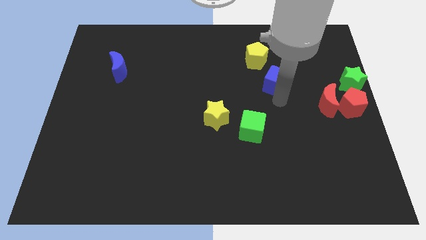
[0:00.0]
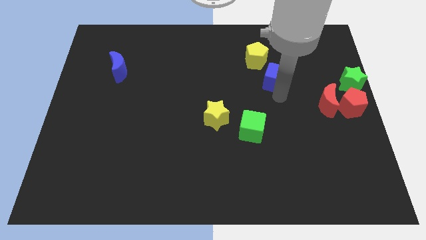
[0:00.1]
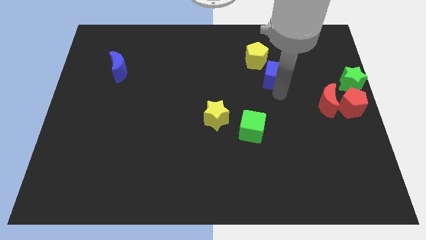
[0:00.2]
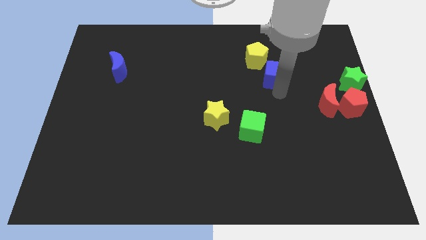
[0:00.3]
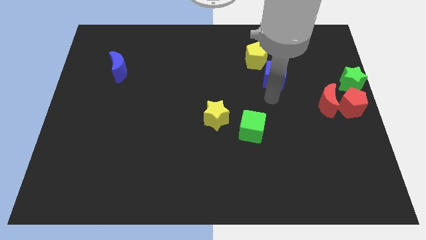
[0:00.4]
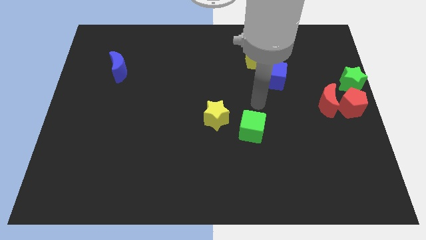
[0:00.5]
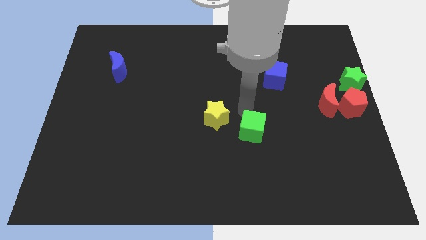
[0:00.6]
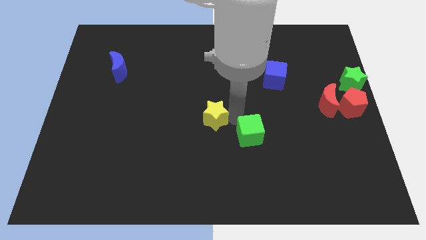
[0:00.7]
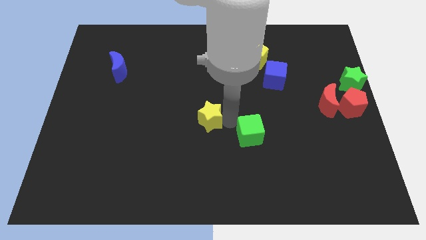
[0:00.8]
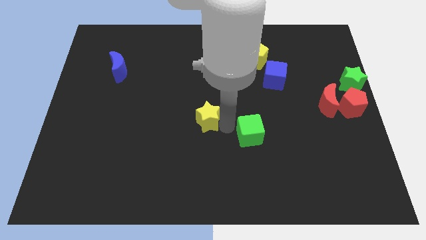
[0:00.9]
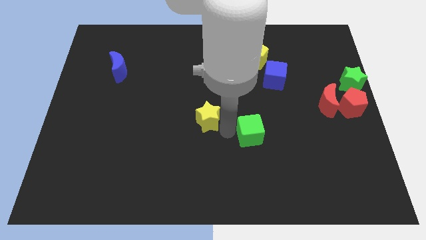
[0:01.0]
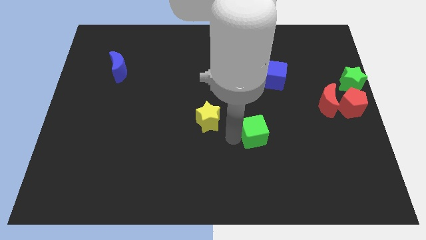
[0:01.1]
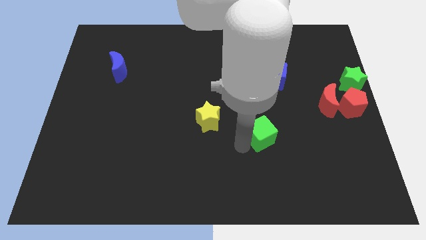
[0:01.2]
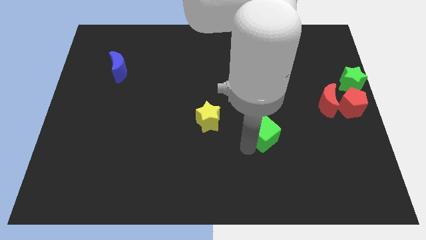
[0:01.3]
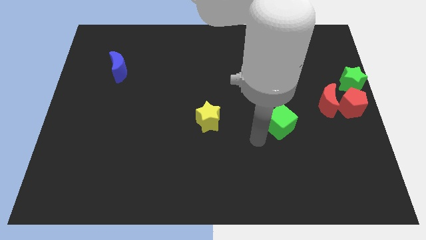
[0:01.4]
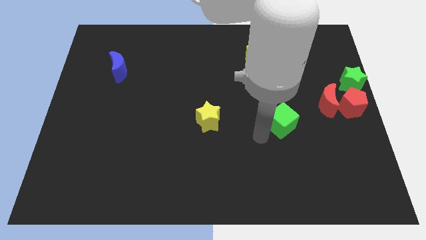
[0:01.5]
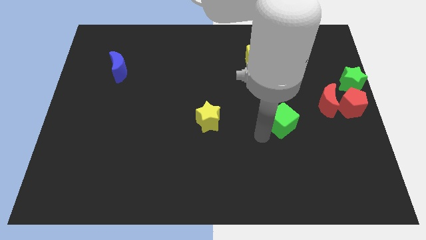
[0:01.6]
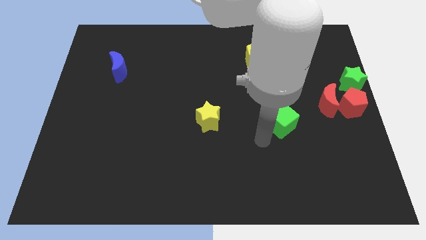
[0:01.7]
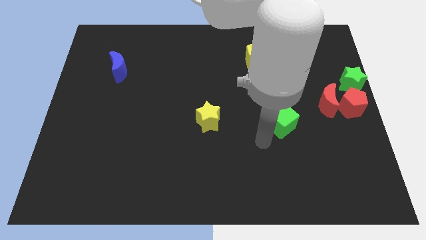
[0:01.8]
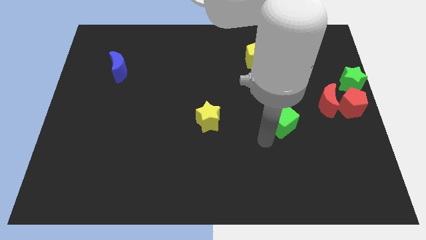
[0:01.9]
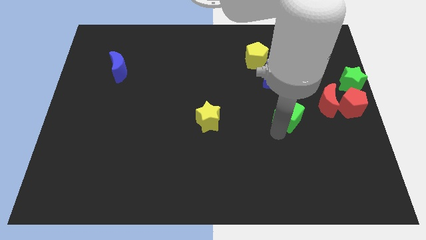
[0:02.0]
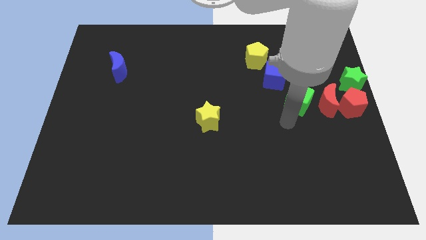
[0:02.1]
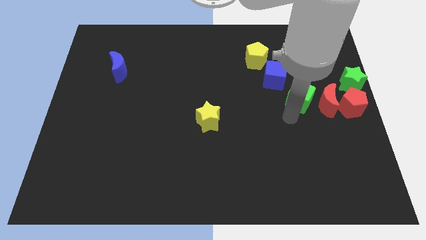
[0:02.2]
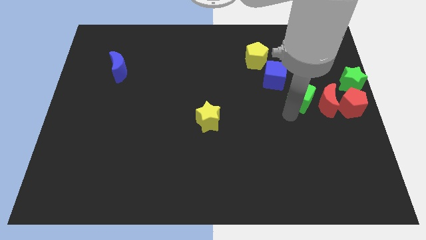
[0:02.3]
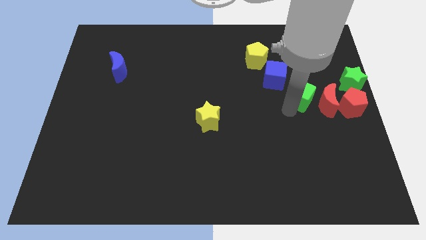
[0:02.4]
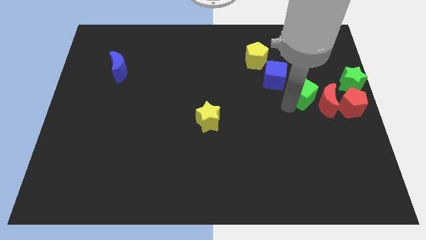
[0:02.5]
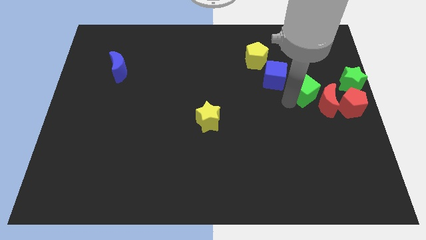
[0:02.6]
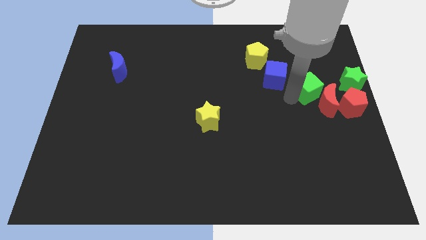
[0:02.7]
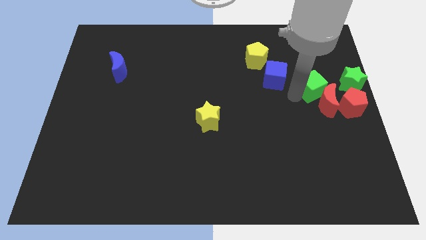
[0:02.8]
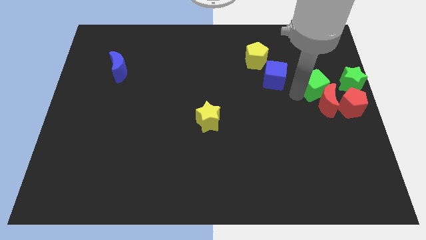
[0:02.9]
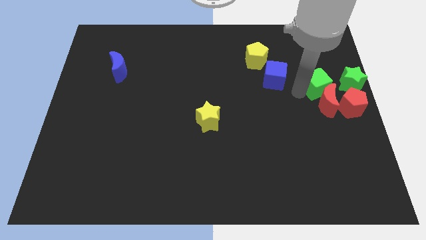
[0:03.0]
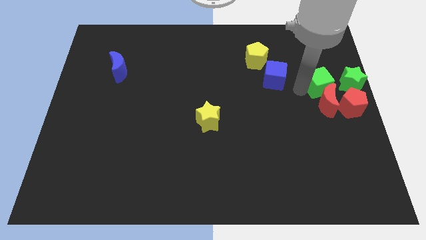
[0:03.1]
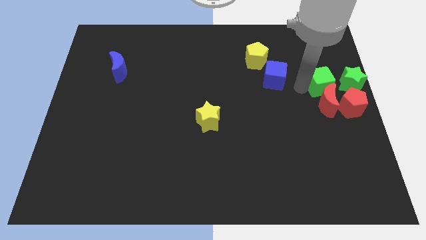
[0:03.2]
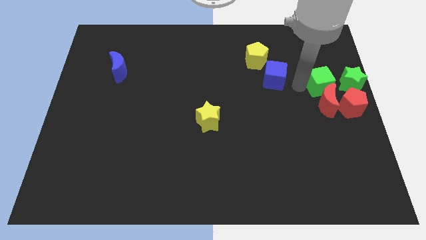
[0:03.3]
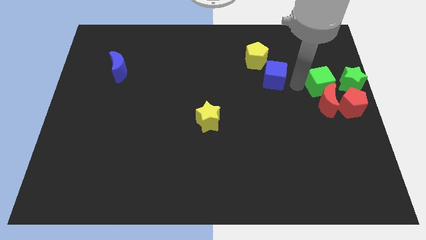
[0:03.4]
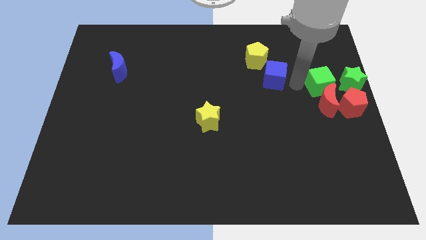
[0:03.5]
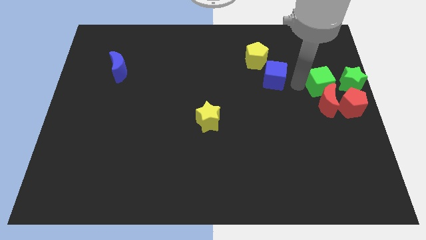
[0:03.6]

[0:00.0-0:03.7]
place the green cube left to the green star

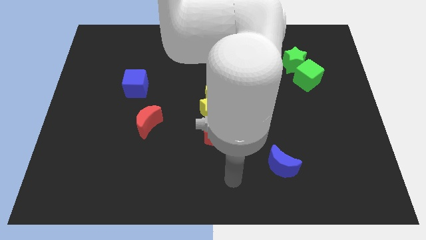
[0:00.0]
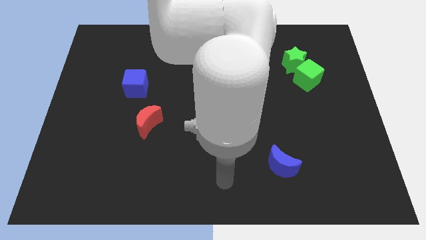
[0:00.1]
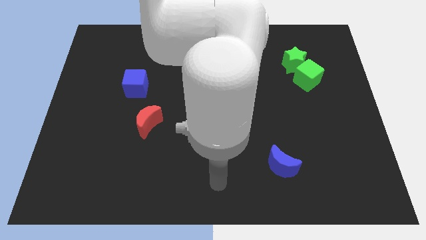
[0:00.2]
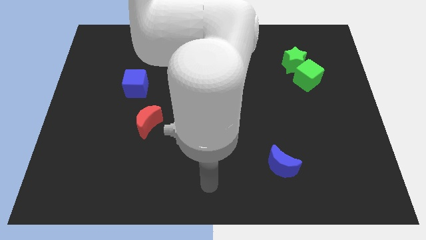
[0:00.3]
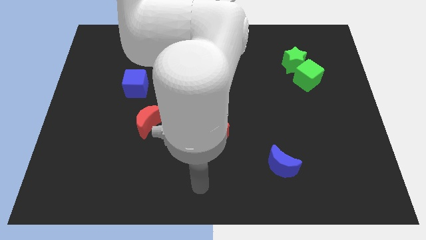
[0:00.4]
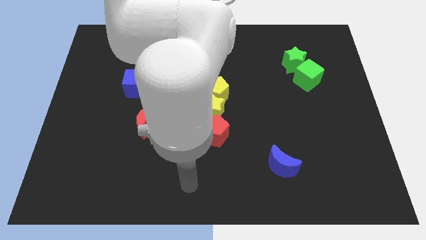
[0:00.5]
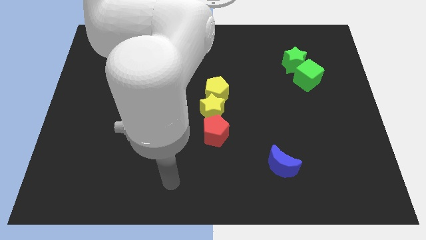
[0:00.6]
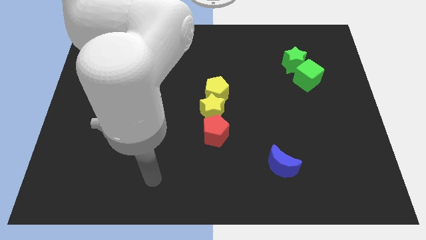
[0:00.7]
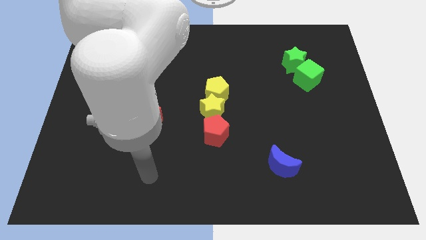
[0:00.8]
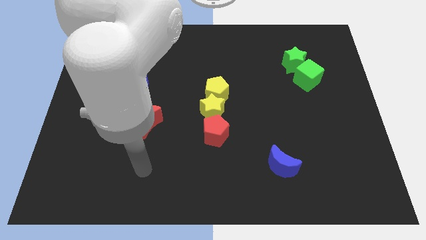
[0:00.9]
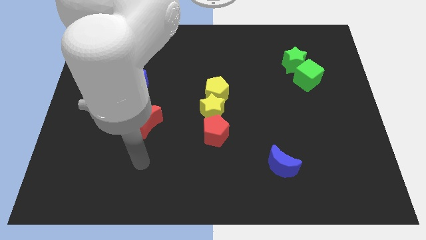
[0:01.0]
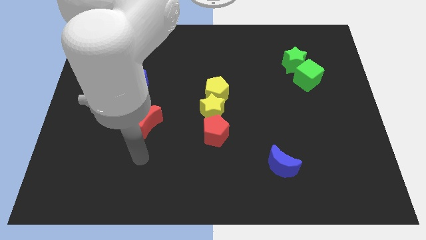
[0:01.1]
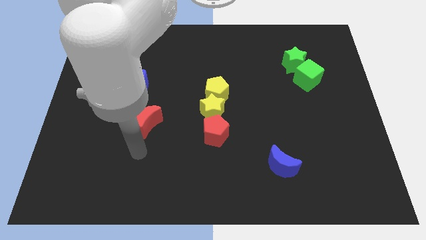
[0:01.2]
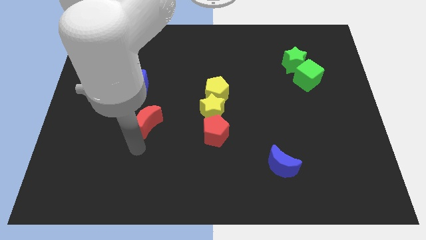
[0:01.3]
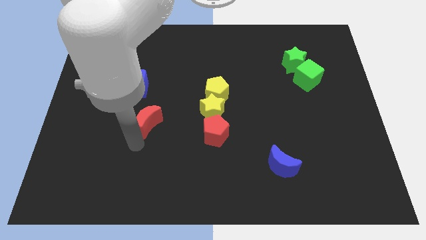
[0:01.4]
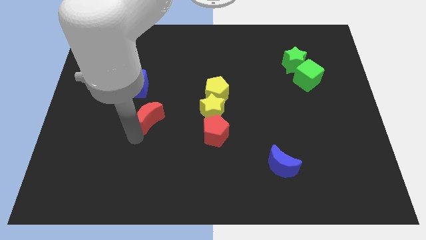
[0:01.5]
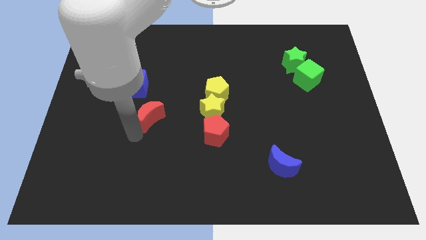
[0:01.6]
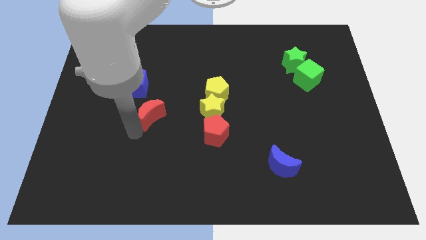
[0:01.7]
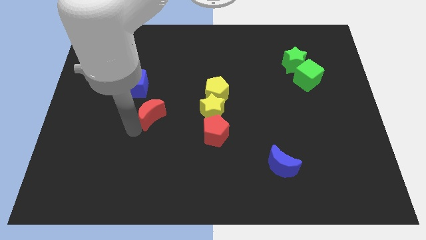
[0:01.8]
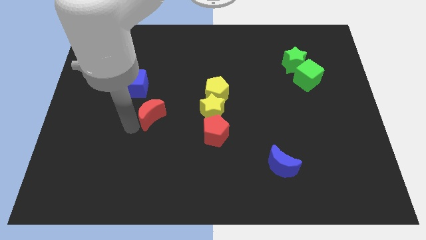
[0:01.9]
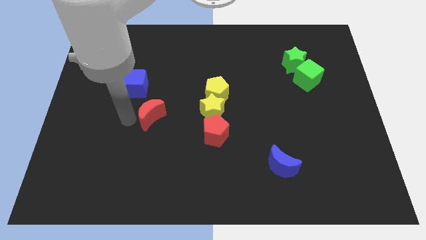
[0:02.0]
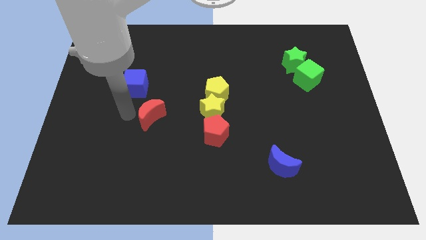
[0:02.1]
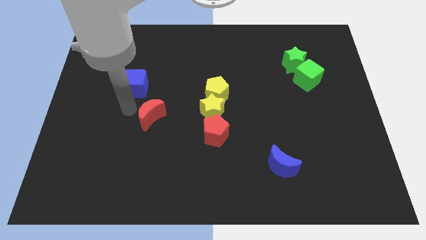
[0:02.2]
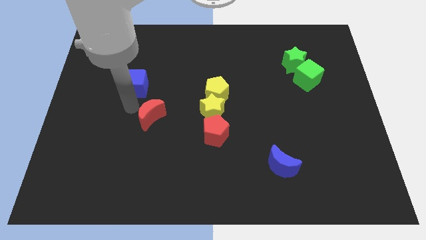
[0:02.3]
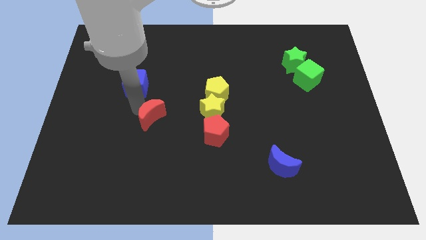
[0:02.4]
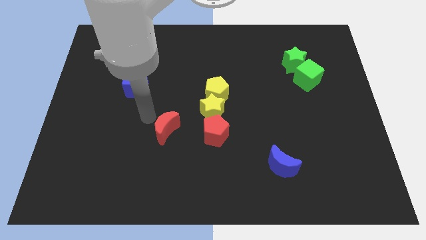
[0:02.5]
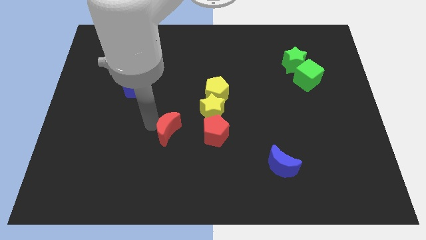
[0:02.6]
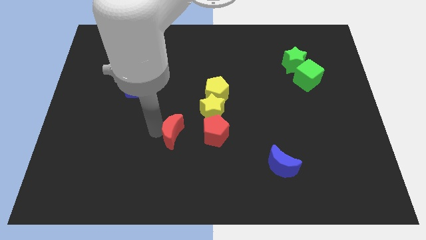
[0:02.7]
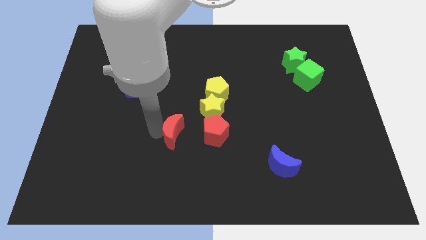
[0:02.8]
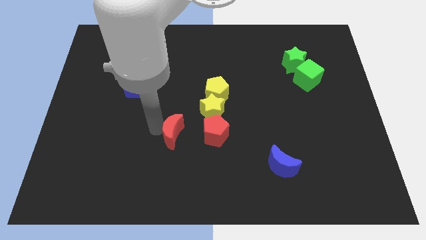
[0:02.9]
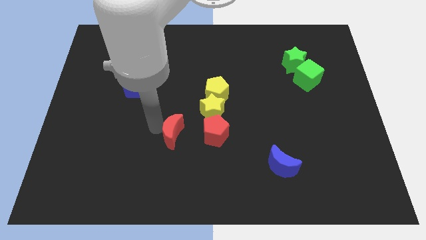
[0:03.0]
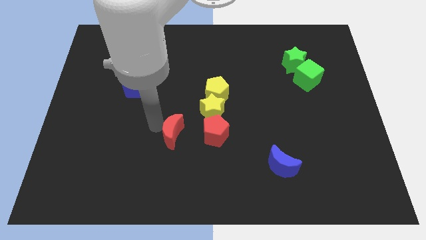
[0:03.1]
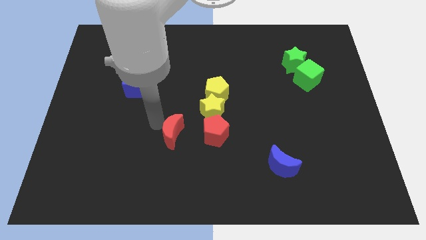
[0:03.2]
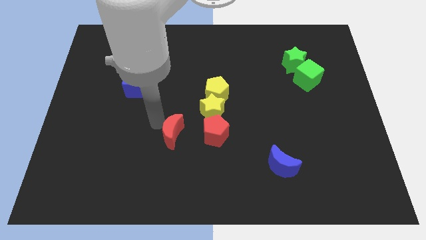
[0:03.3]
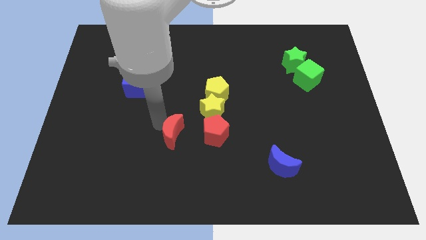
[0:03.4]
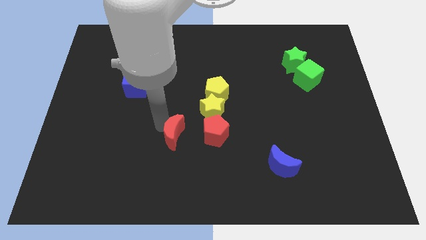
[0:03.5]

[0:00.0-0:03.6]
place red moon adjacent to red pentagon

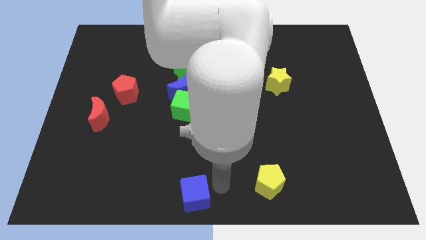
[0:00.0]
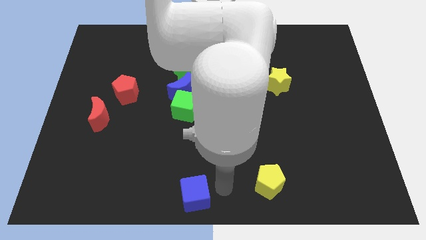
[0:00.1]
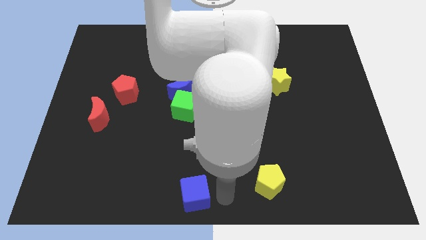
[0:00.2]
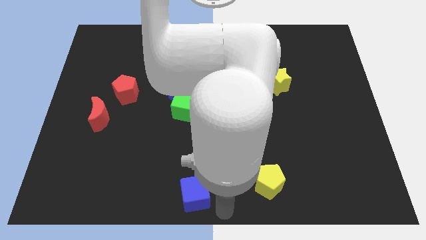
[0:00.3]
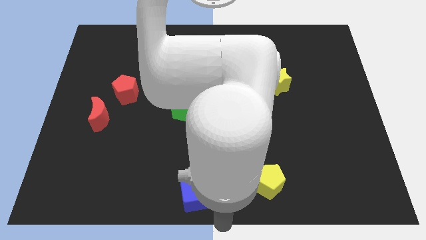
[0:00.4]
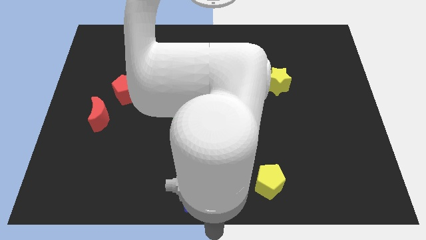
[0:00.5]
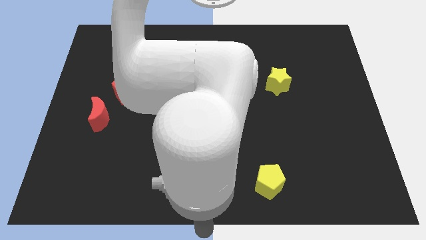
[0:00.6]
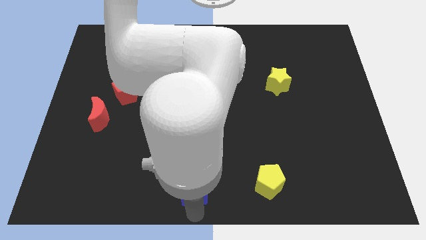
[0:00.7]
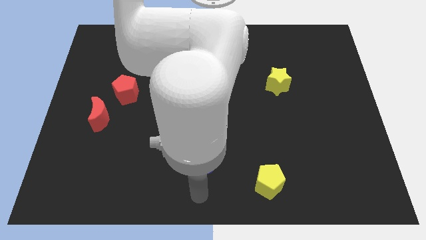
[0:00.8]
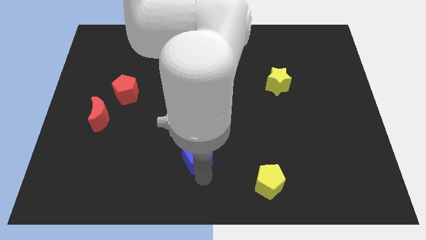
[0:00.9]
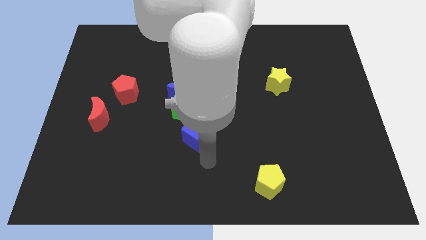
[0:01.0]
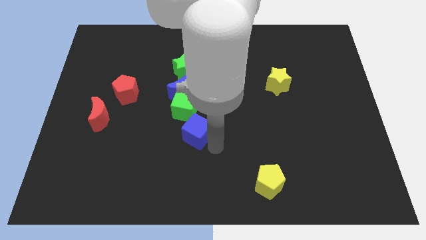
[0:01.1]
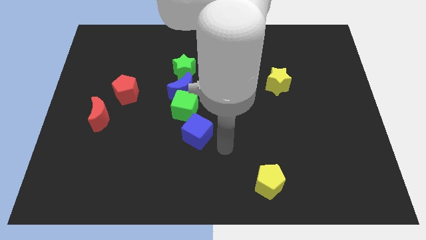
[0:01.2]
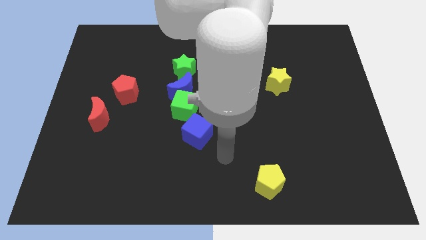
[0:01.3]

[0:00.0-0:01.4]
push the blue cube into the green cube

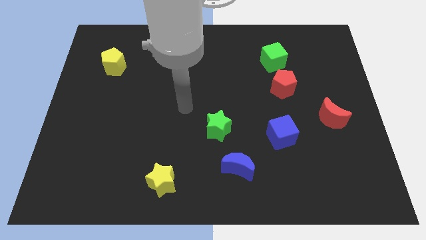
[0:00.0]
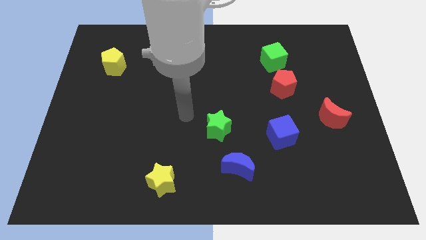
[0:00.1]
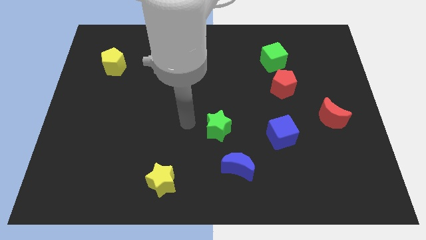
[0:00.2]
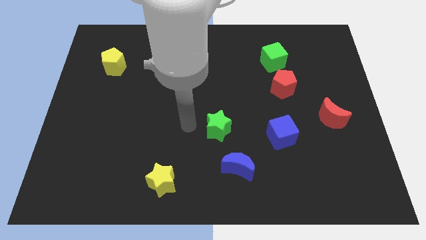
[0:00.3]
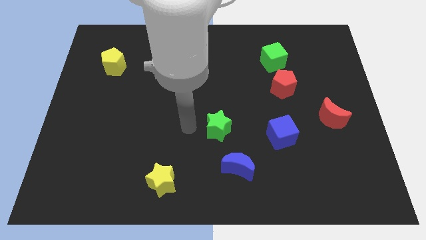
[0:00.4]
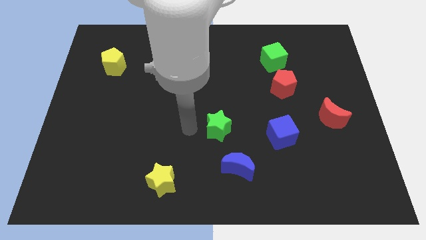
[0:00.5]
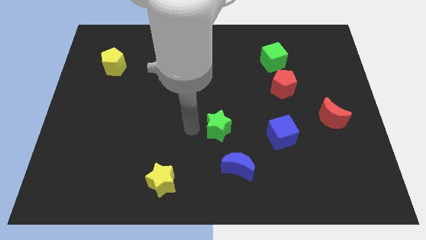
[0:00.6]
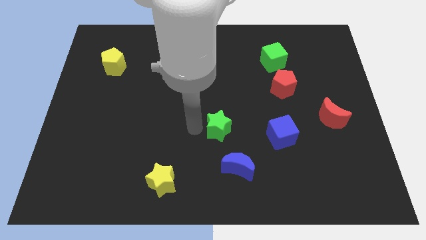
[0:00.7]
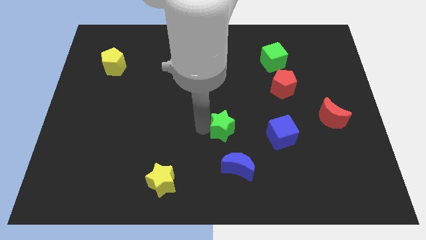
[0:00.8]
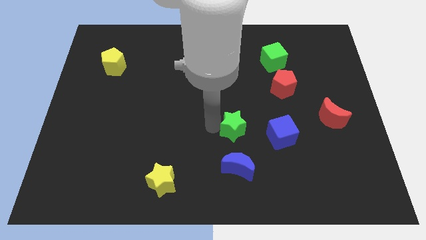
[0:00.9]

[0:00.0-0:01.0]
move the green star above the blue moon
